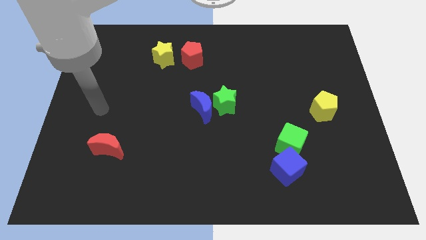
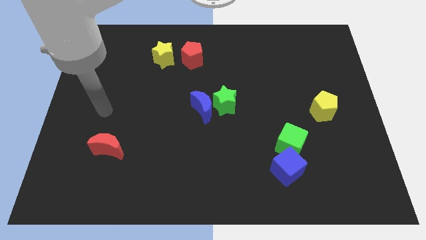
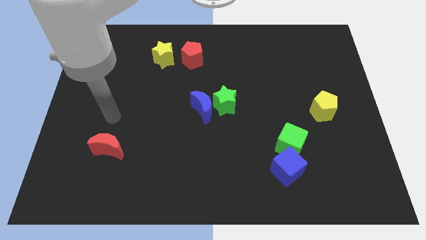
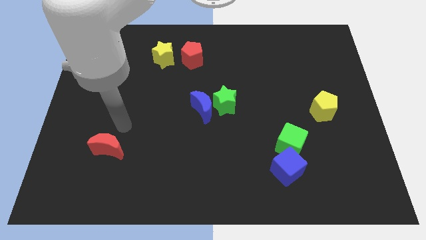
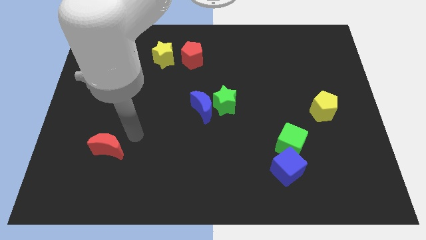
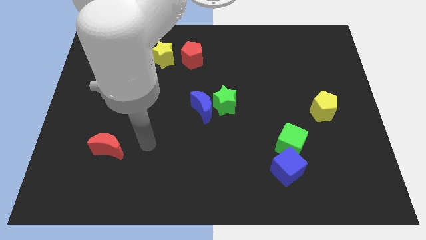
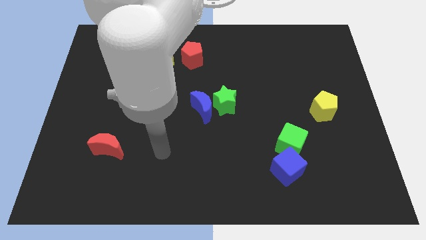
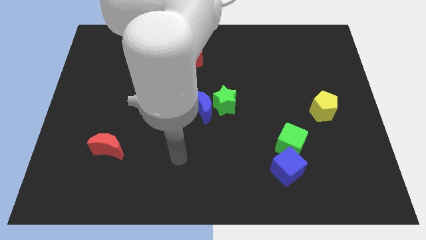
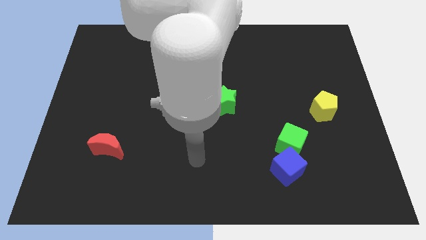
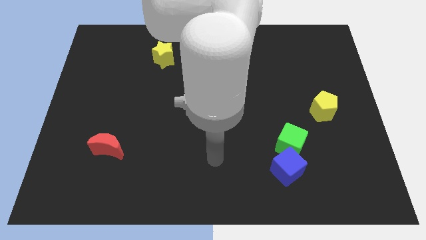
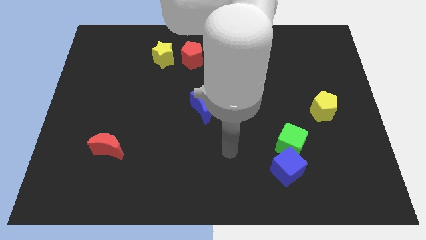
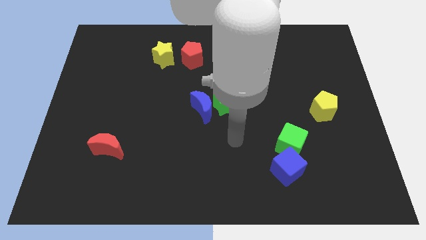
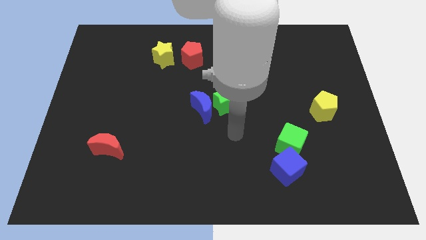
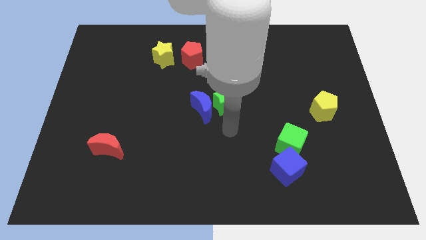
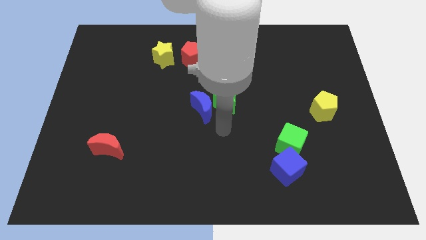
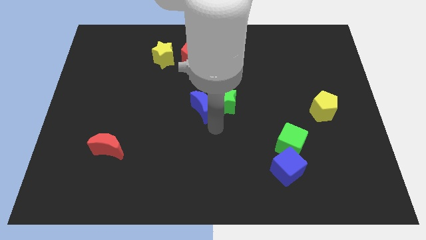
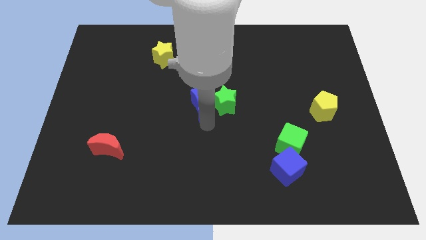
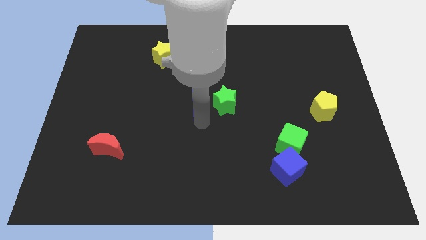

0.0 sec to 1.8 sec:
move your arm towards the blue crescent

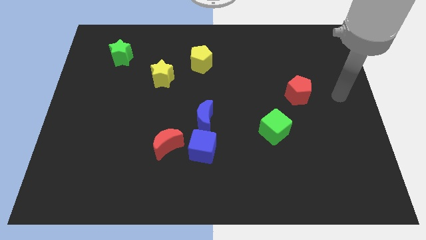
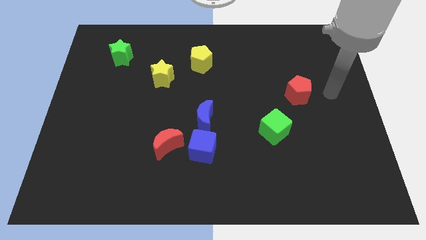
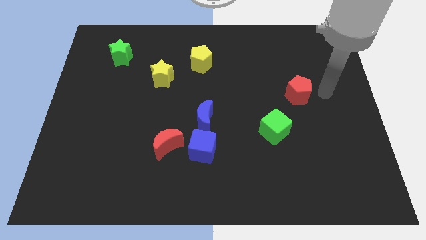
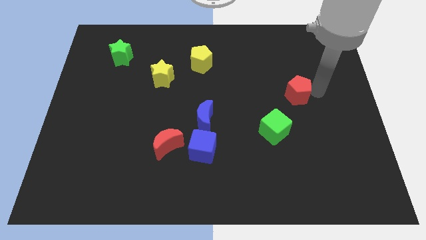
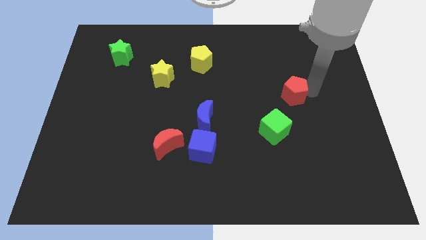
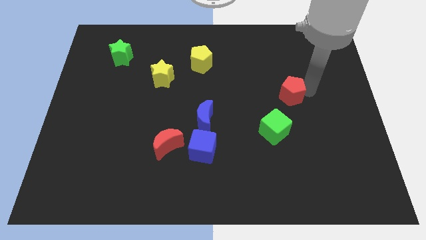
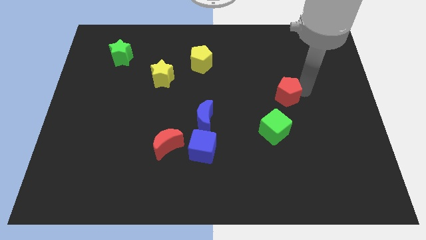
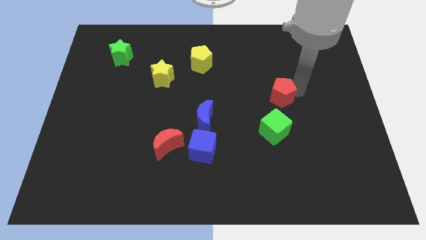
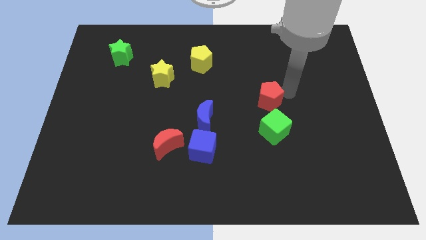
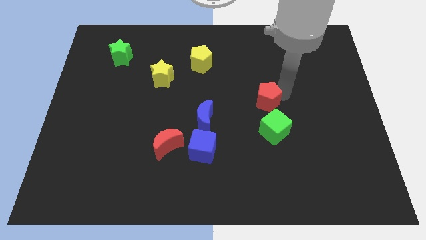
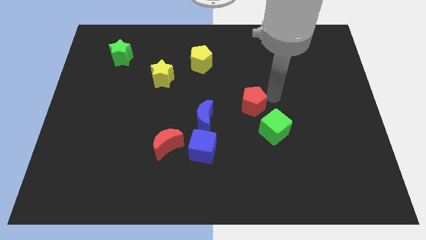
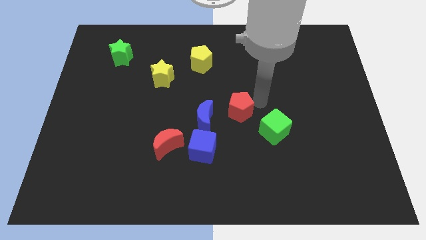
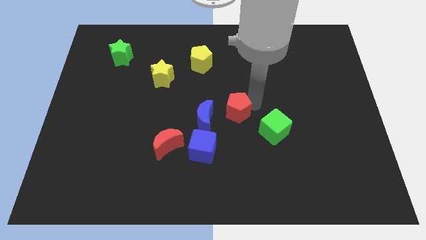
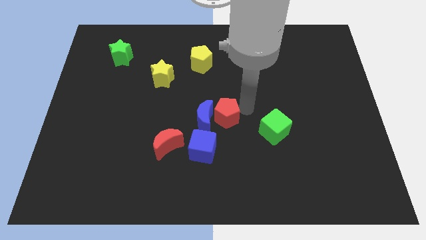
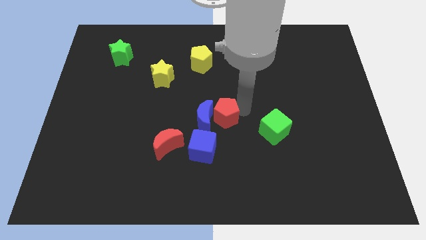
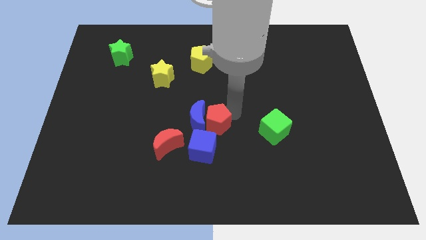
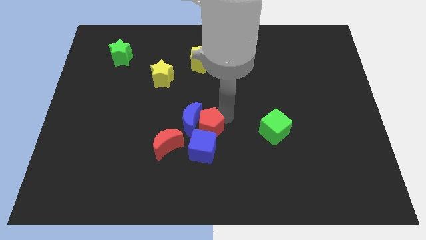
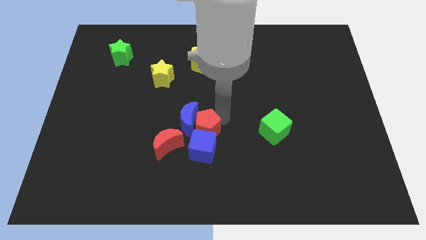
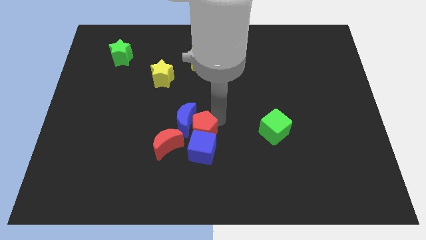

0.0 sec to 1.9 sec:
push the red pentagon into the group of blue blocks

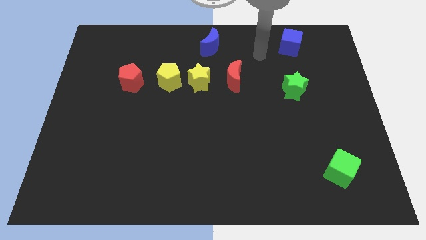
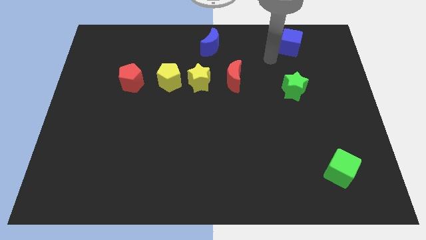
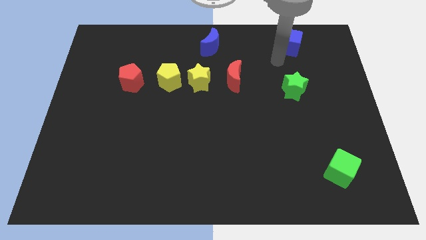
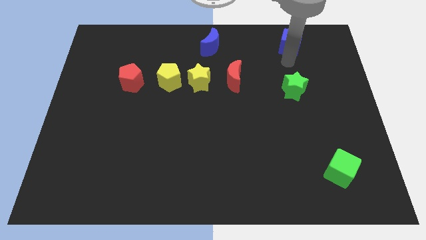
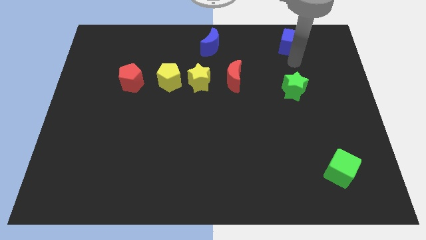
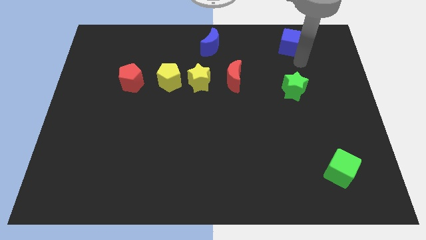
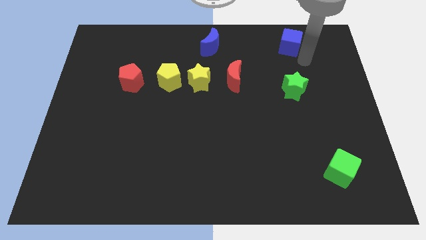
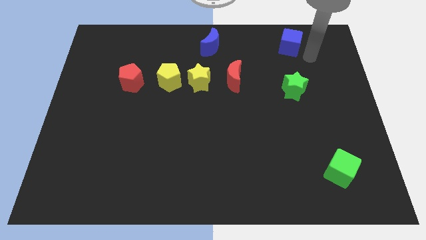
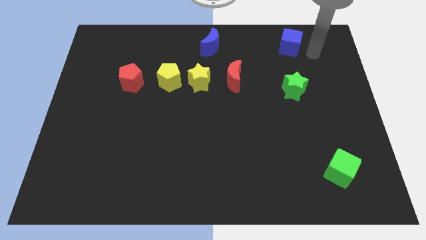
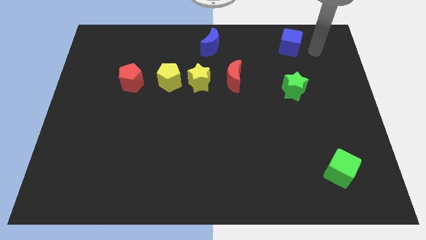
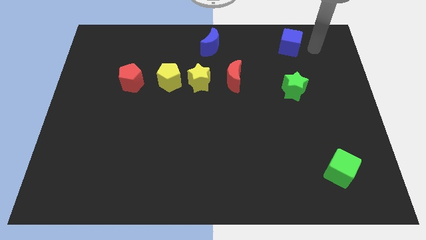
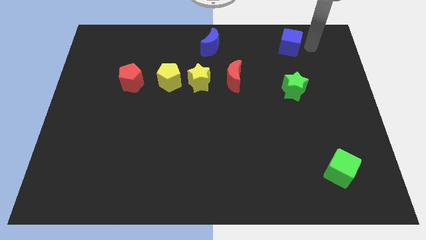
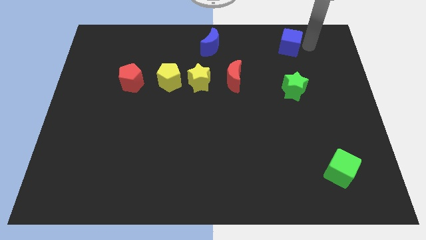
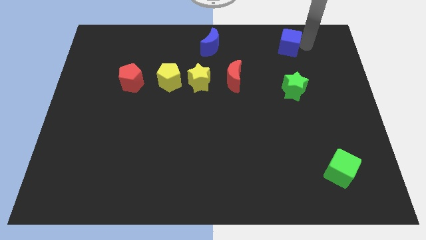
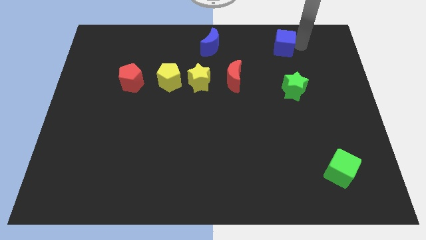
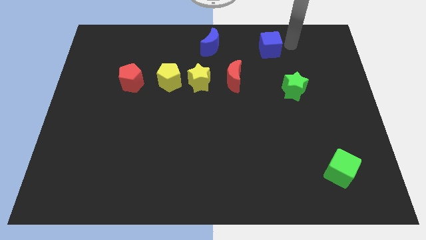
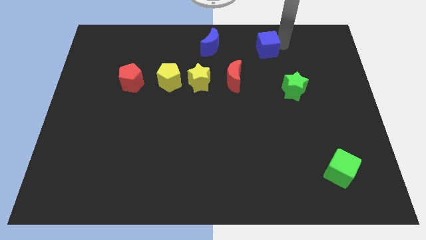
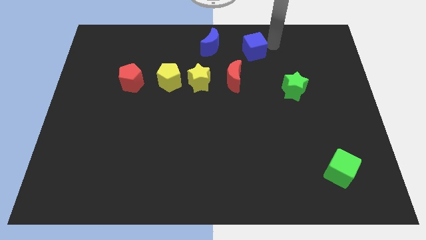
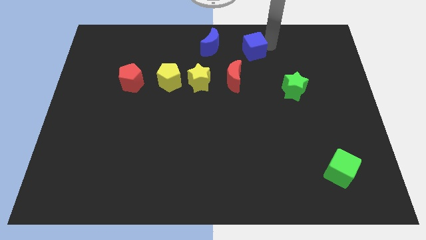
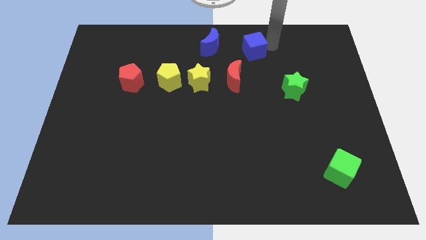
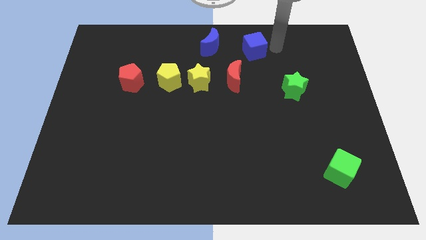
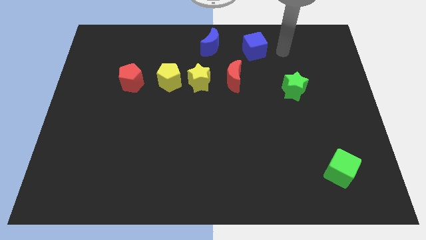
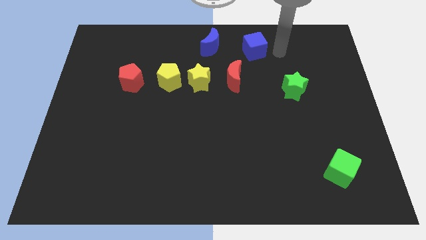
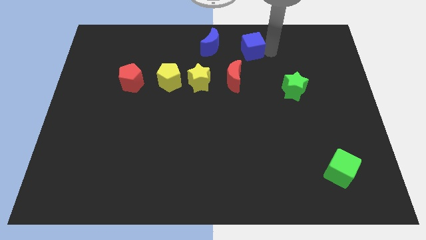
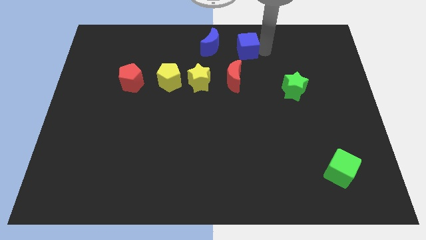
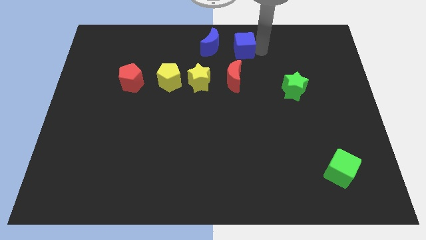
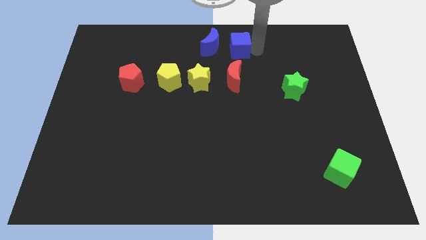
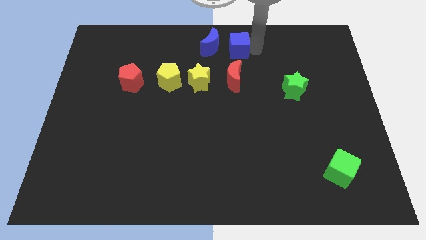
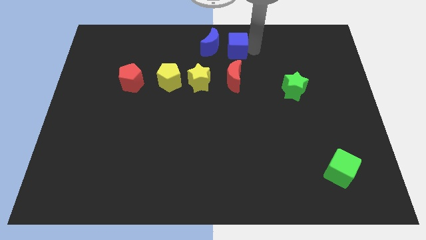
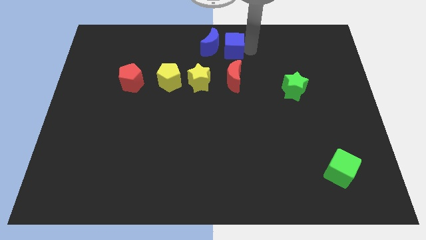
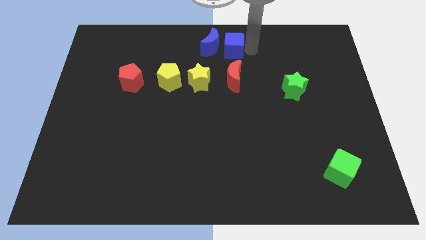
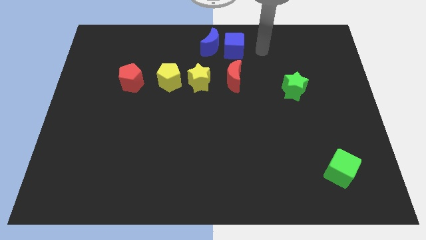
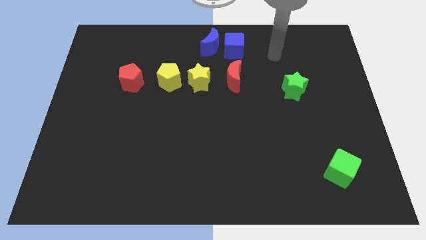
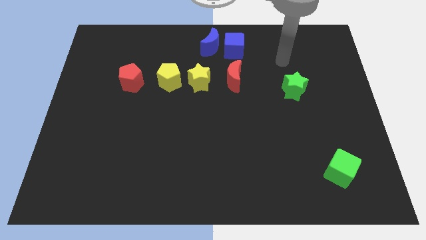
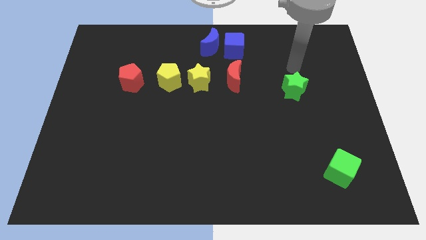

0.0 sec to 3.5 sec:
move the blue cube to the right of the blue crescent

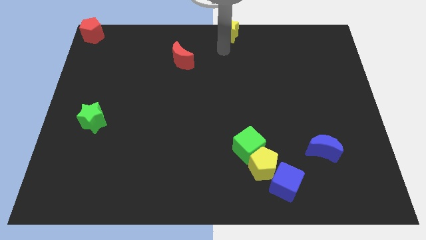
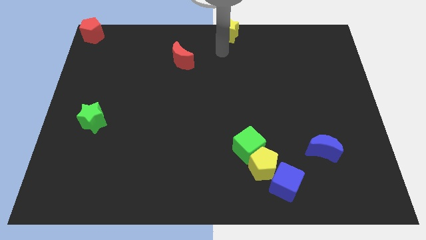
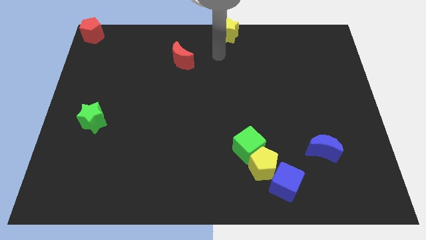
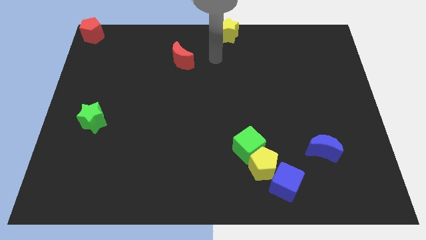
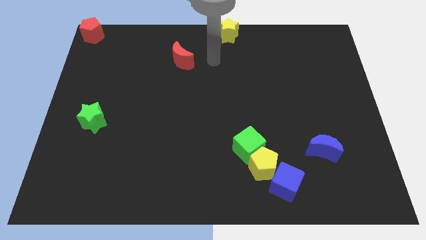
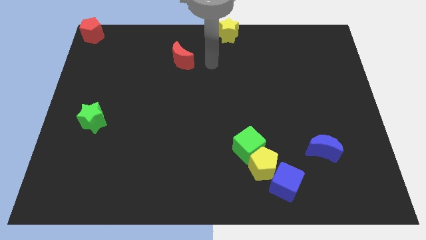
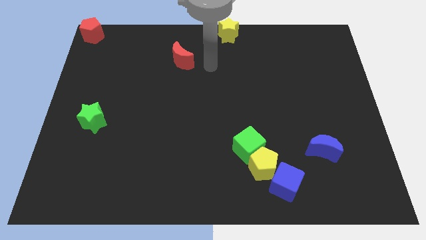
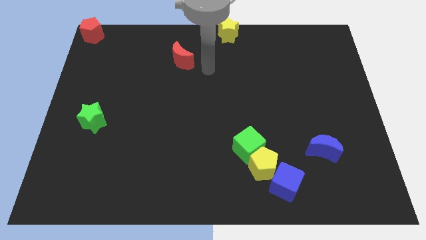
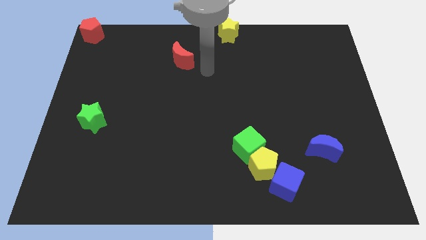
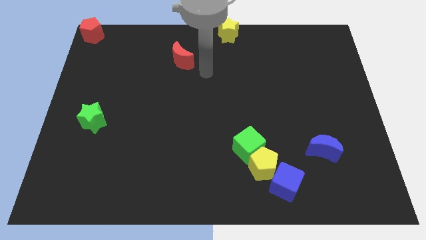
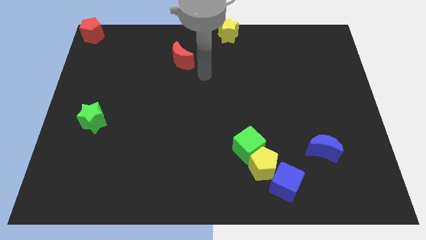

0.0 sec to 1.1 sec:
move your arm away from yellow star

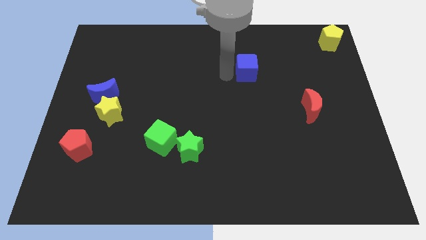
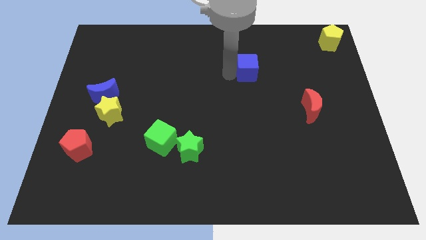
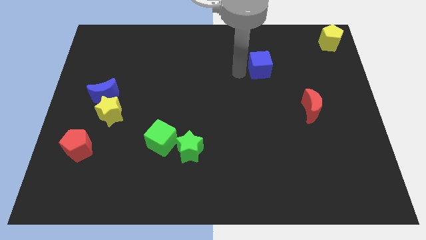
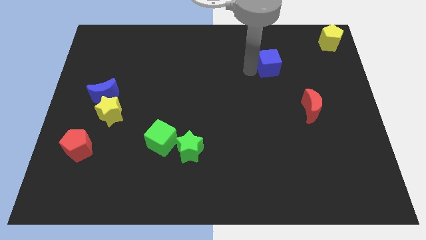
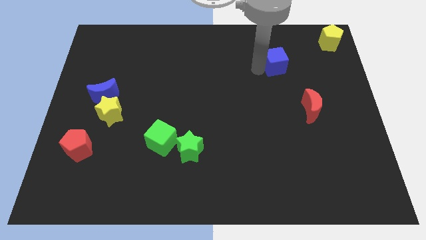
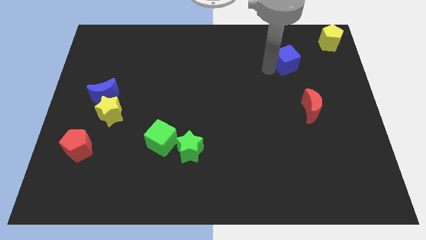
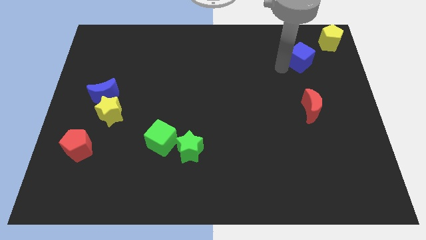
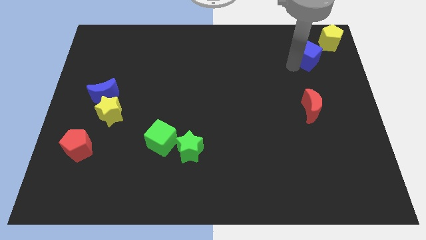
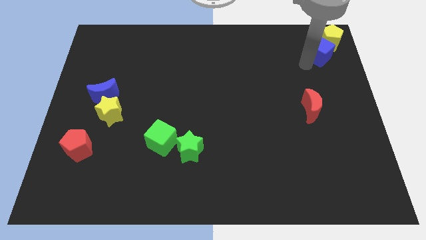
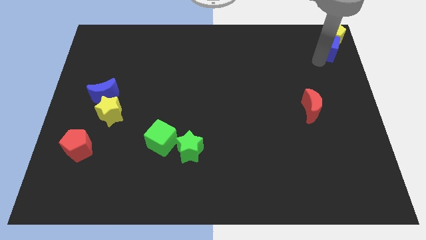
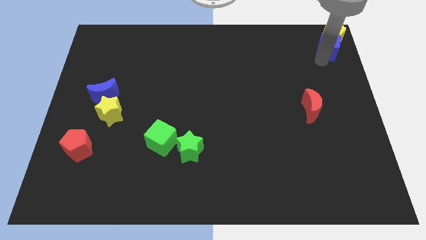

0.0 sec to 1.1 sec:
move blue cube into yellow pentagon
